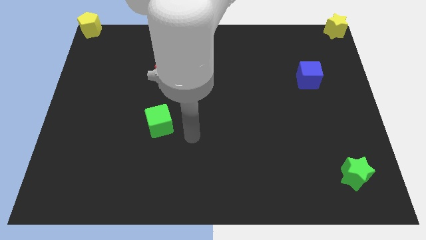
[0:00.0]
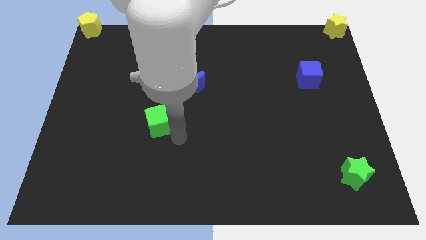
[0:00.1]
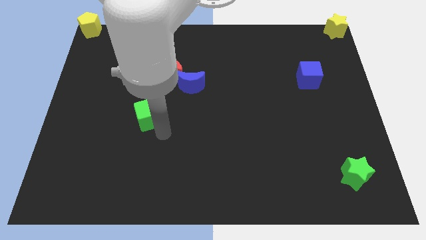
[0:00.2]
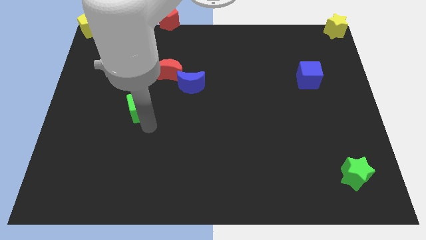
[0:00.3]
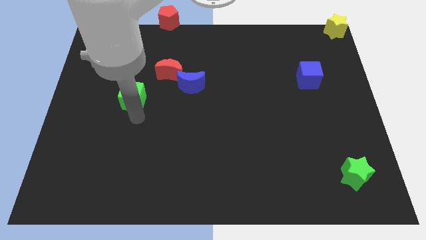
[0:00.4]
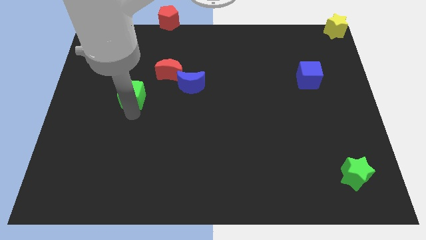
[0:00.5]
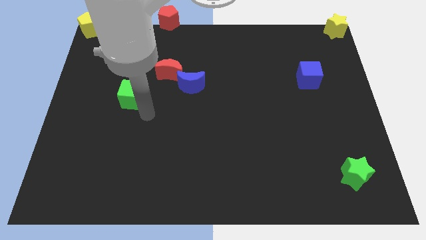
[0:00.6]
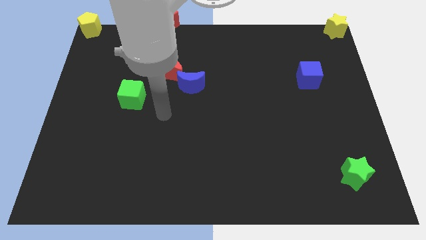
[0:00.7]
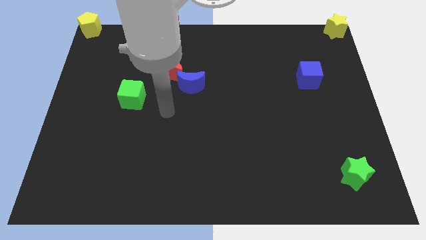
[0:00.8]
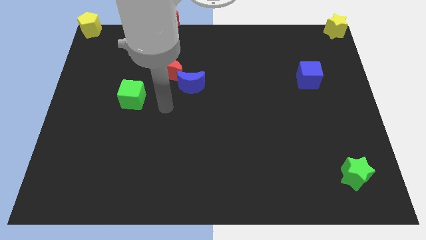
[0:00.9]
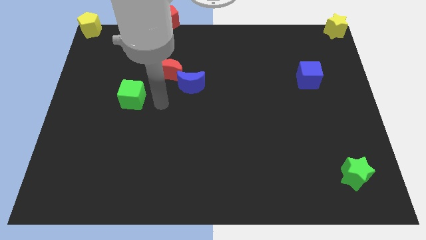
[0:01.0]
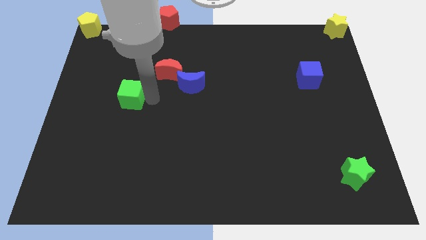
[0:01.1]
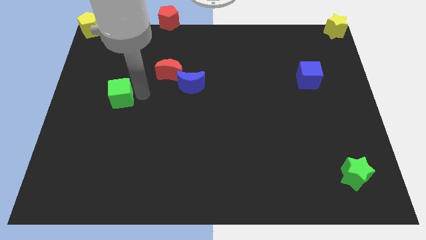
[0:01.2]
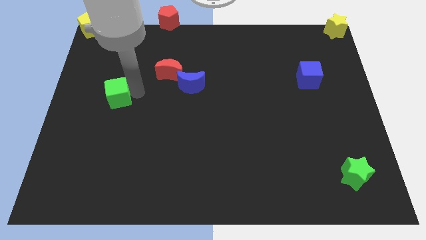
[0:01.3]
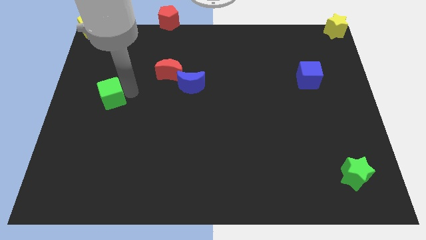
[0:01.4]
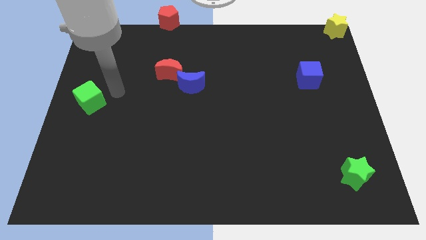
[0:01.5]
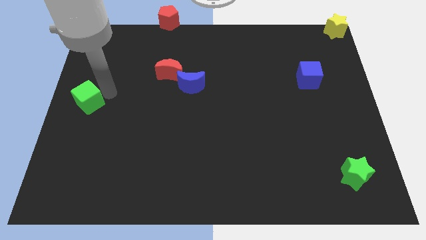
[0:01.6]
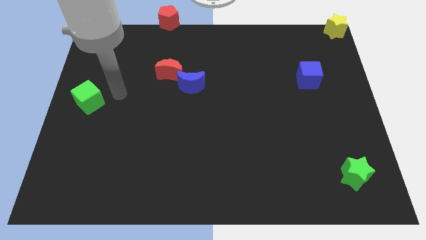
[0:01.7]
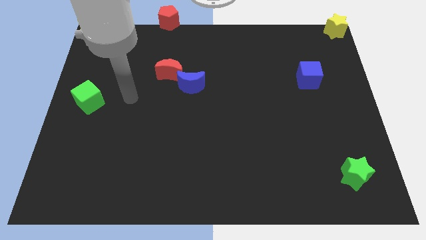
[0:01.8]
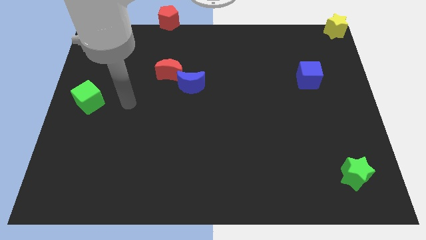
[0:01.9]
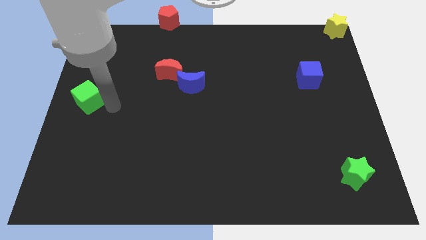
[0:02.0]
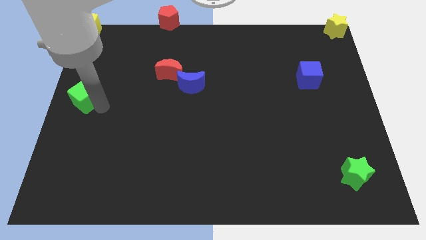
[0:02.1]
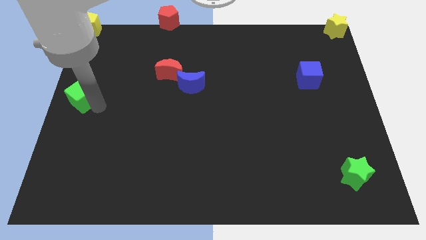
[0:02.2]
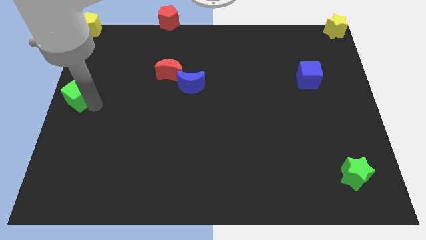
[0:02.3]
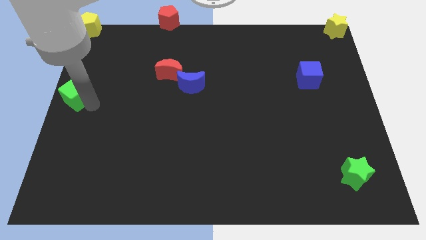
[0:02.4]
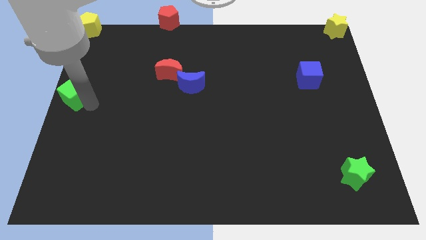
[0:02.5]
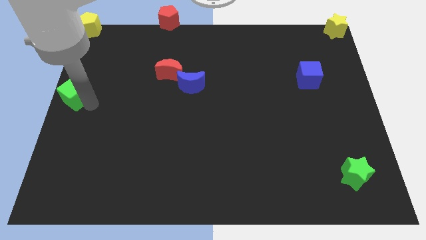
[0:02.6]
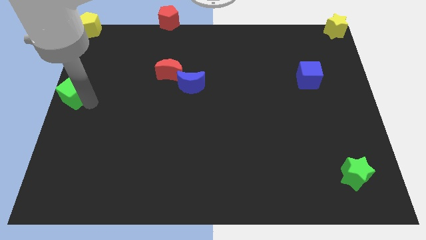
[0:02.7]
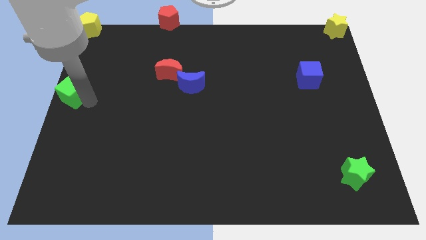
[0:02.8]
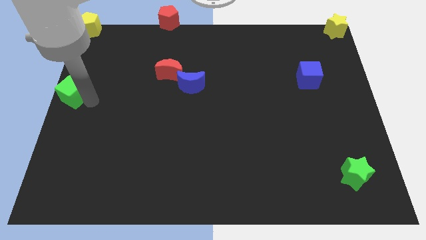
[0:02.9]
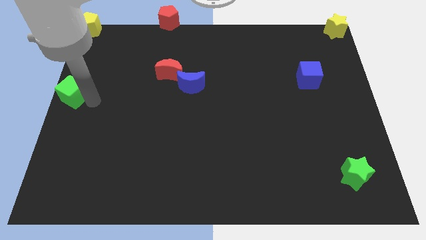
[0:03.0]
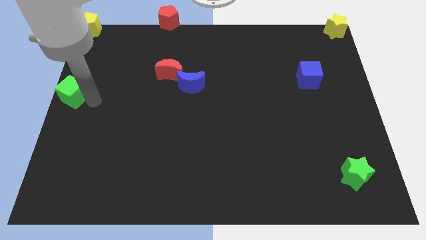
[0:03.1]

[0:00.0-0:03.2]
move green cube to the left center

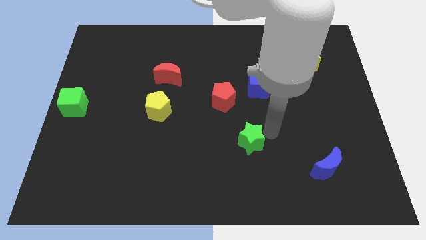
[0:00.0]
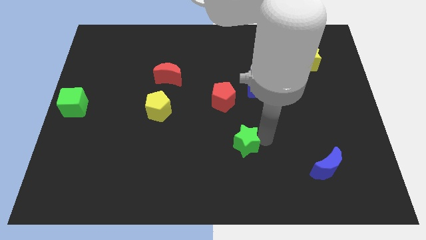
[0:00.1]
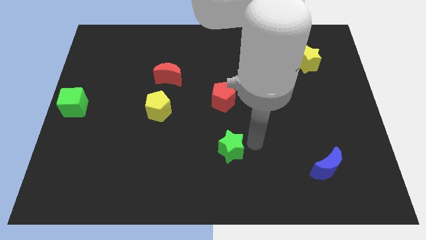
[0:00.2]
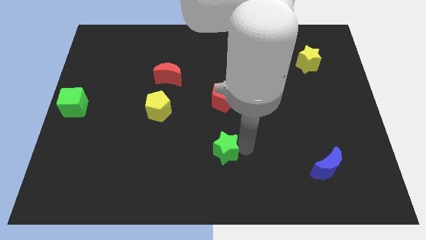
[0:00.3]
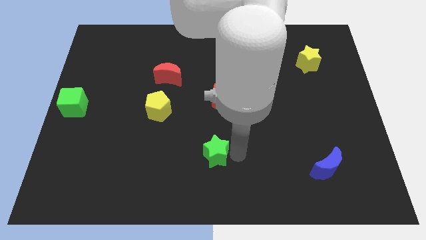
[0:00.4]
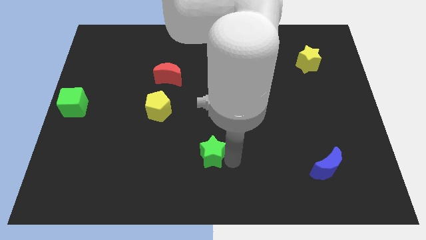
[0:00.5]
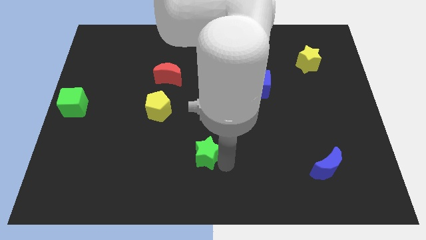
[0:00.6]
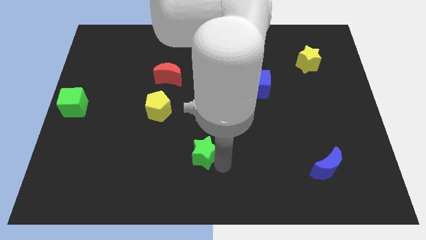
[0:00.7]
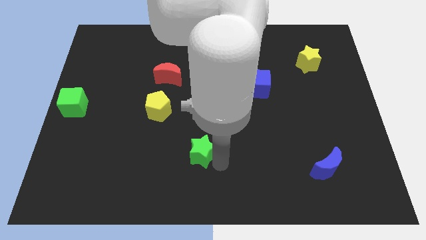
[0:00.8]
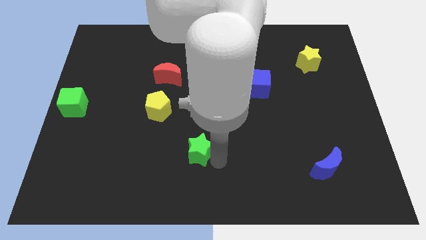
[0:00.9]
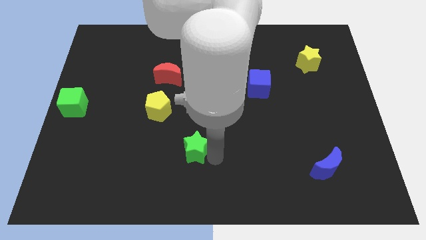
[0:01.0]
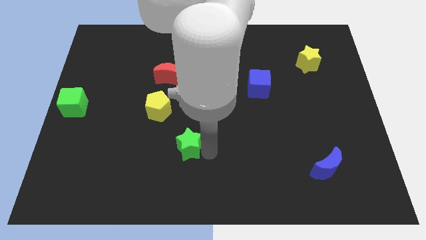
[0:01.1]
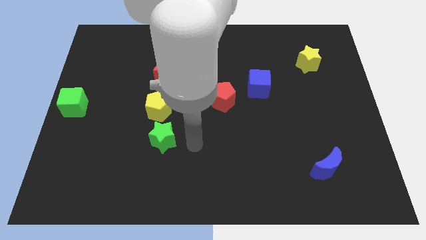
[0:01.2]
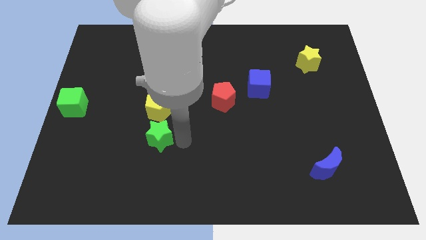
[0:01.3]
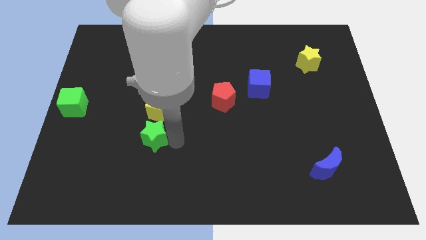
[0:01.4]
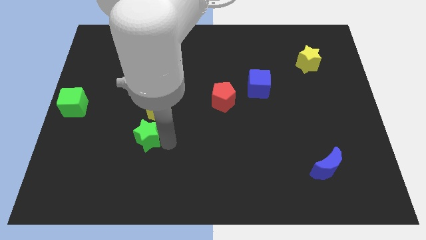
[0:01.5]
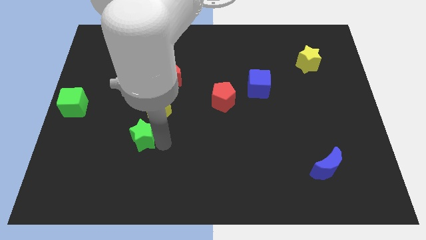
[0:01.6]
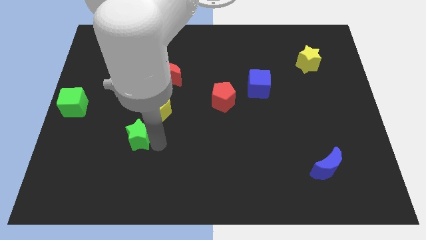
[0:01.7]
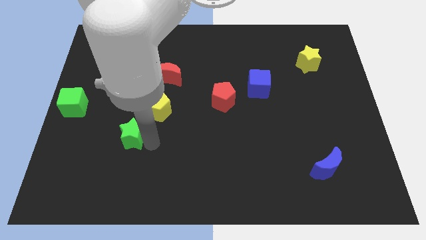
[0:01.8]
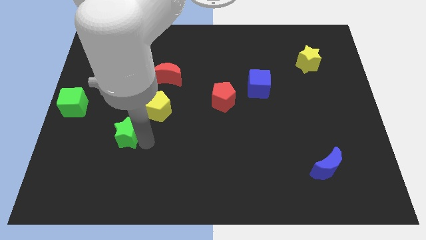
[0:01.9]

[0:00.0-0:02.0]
push the green star towards the green cube

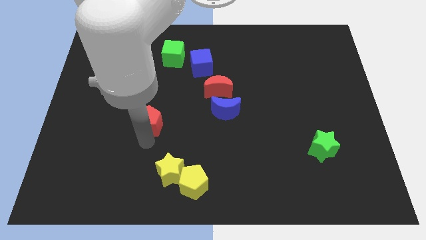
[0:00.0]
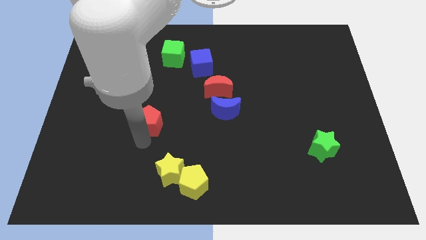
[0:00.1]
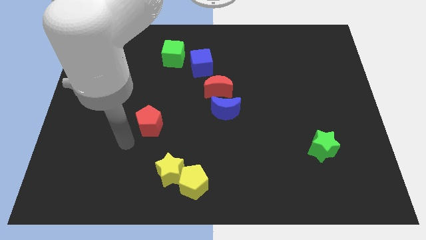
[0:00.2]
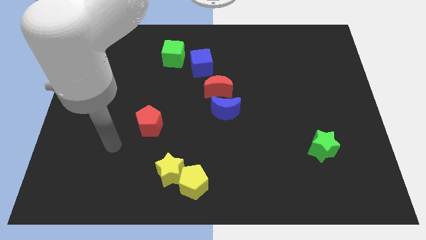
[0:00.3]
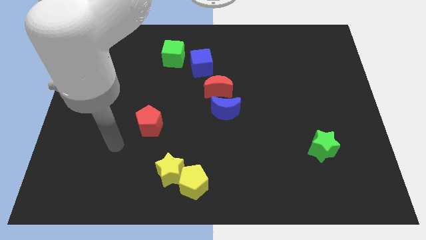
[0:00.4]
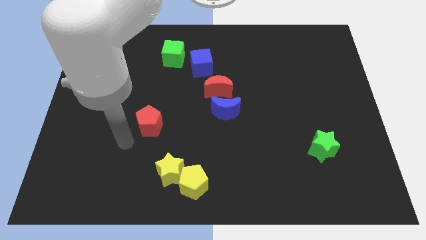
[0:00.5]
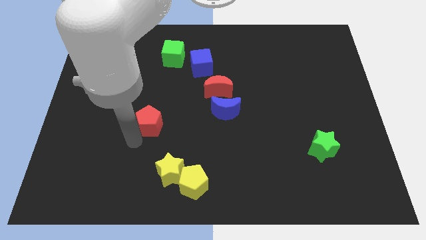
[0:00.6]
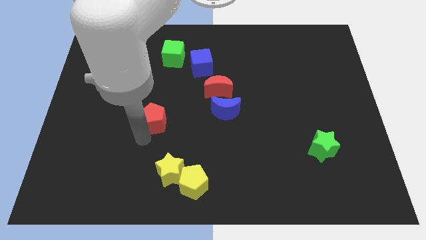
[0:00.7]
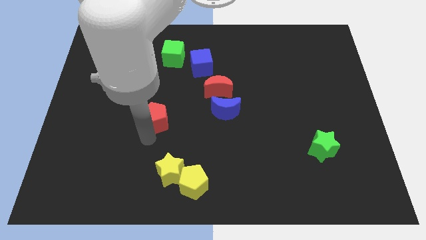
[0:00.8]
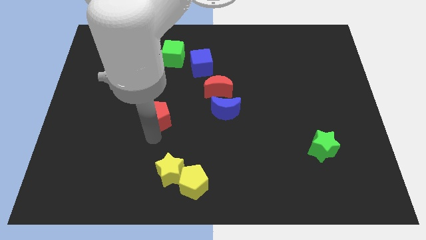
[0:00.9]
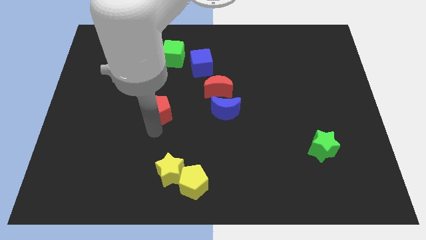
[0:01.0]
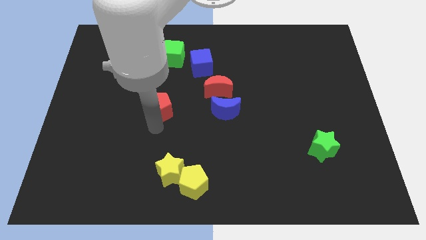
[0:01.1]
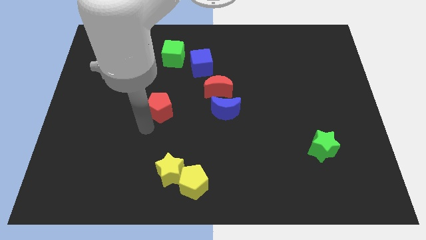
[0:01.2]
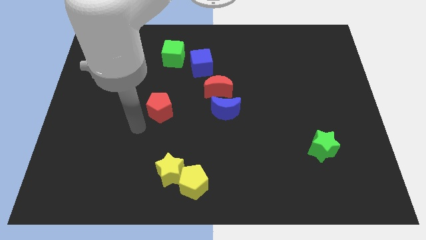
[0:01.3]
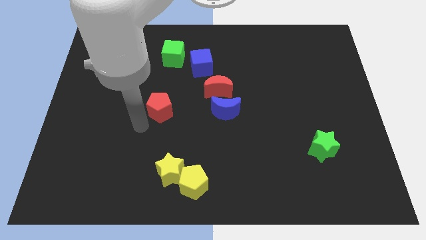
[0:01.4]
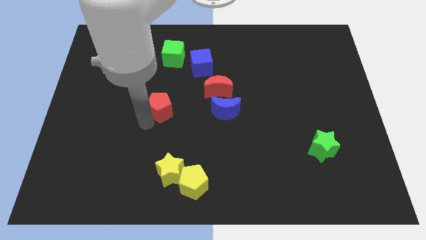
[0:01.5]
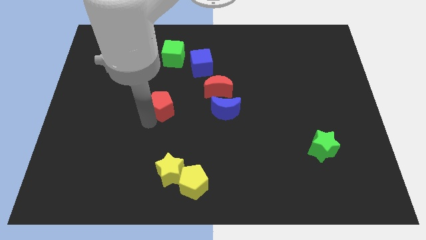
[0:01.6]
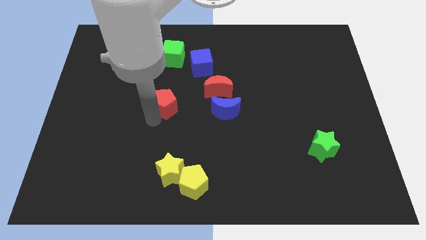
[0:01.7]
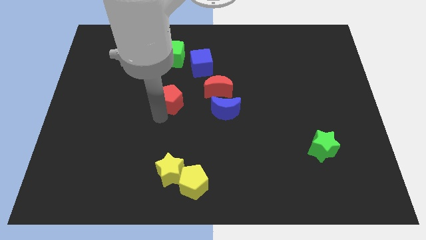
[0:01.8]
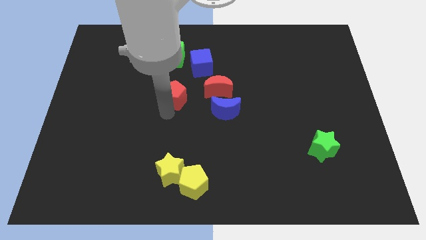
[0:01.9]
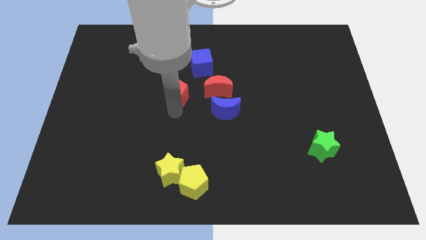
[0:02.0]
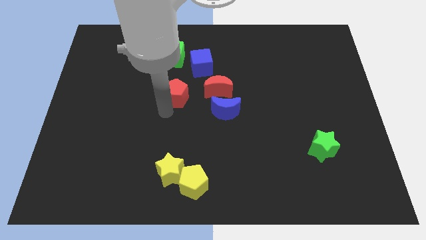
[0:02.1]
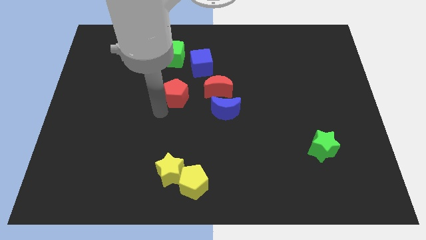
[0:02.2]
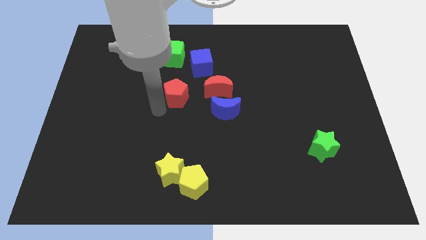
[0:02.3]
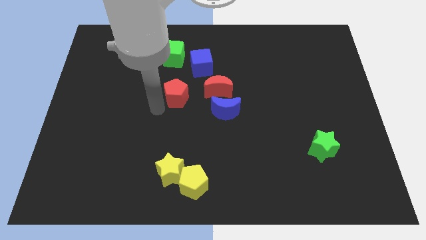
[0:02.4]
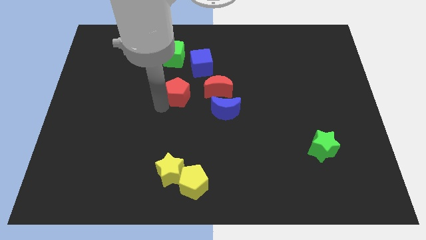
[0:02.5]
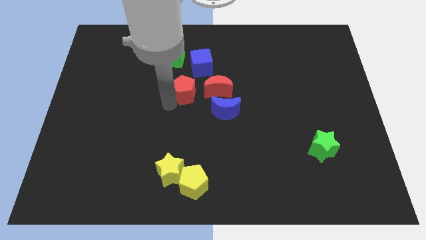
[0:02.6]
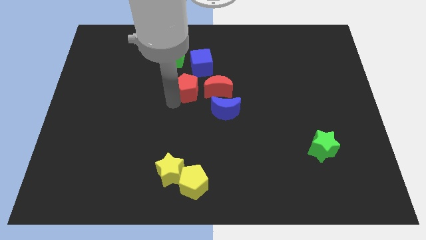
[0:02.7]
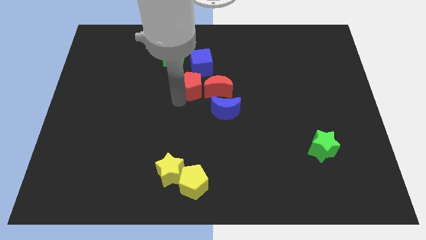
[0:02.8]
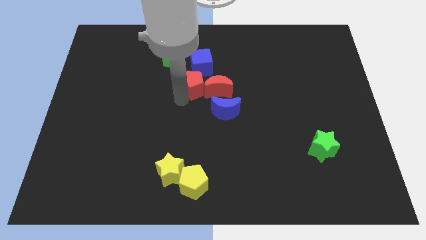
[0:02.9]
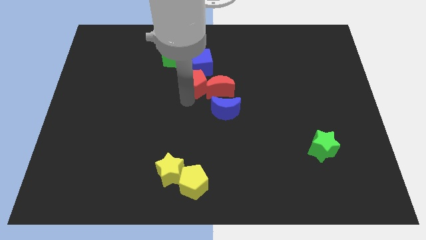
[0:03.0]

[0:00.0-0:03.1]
push the red pentagon to the left of the red crescent

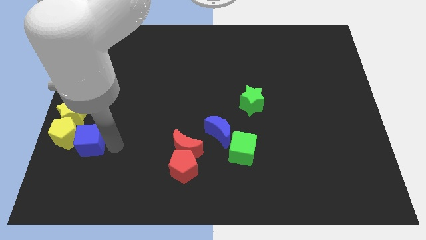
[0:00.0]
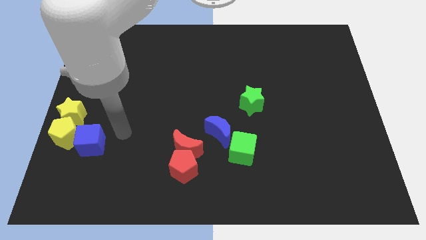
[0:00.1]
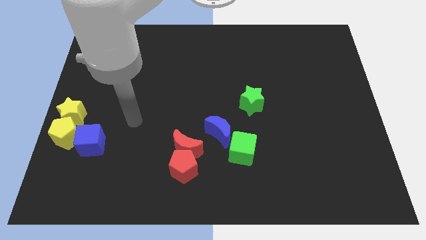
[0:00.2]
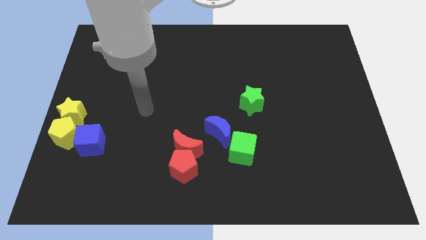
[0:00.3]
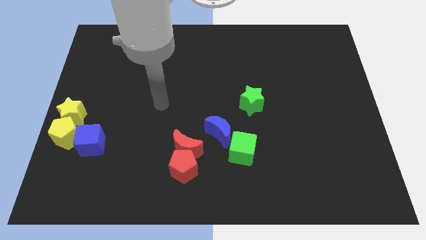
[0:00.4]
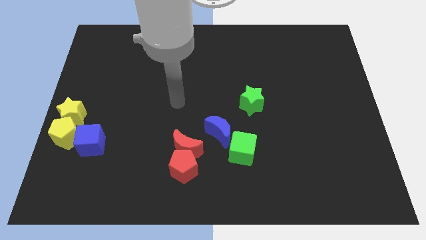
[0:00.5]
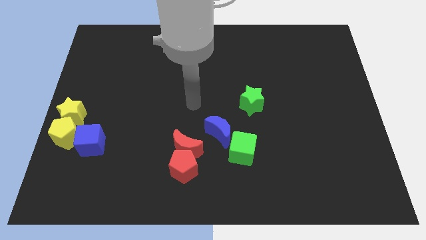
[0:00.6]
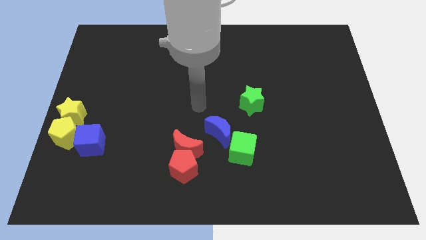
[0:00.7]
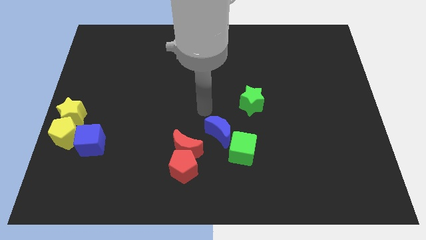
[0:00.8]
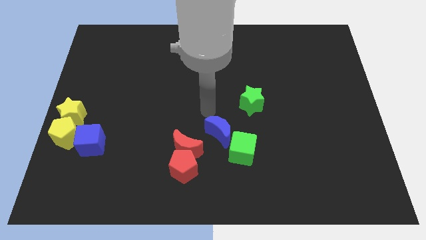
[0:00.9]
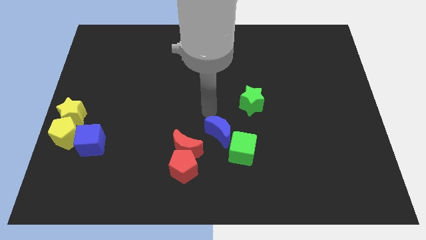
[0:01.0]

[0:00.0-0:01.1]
move your arm away from blue cube
